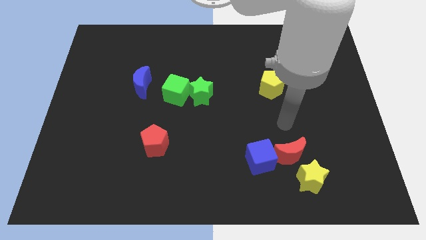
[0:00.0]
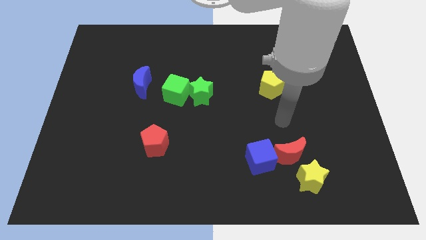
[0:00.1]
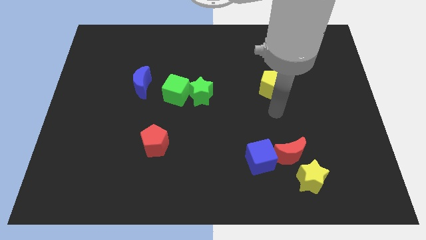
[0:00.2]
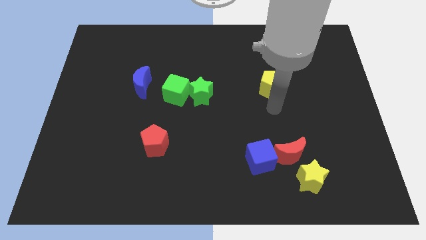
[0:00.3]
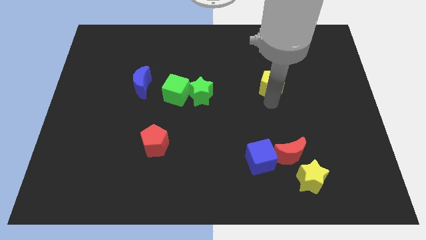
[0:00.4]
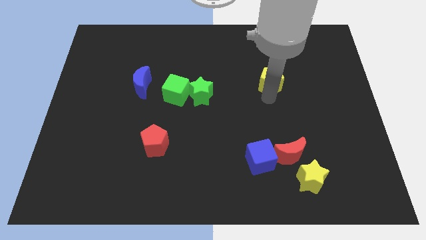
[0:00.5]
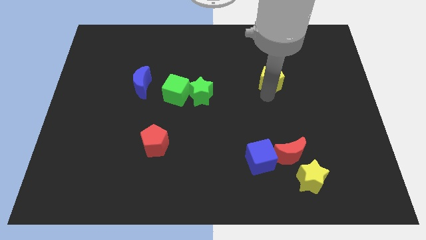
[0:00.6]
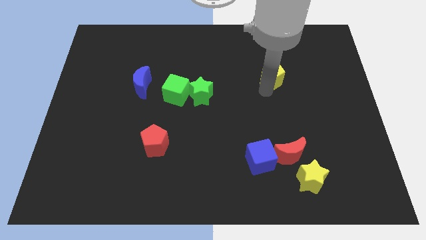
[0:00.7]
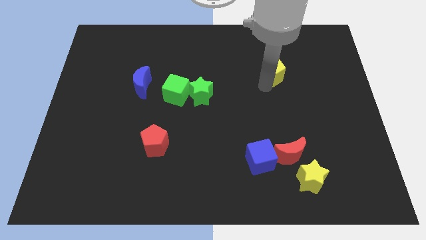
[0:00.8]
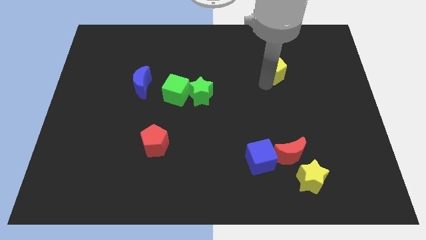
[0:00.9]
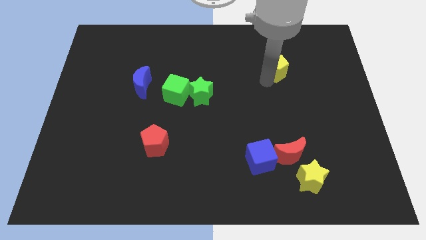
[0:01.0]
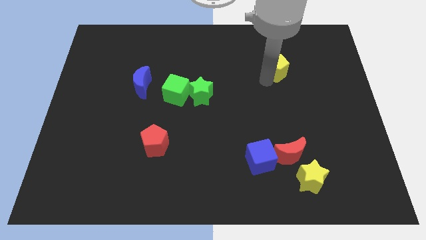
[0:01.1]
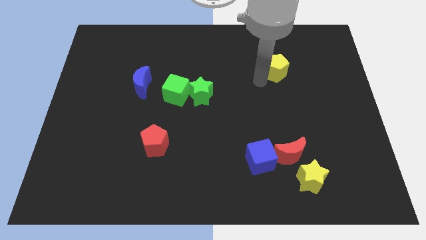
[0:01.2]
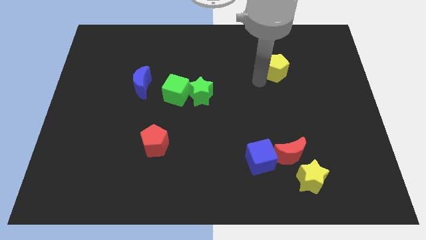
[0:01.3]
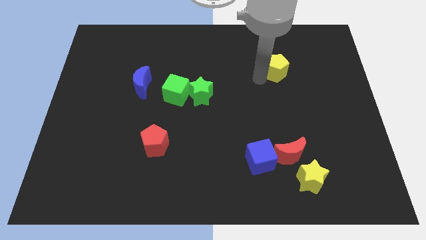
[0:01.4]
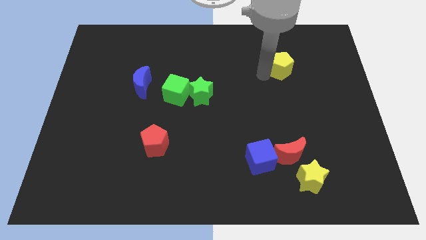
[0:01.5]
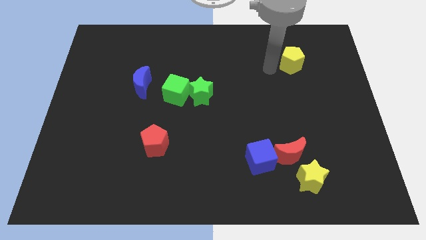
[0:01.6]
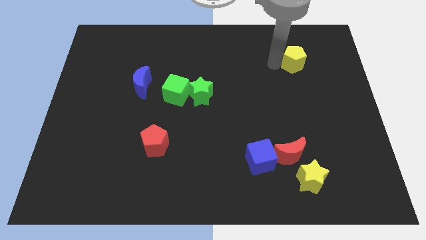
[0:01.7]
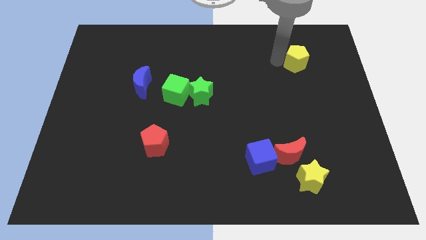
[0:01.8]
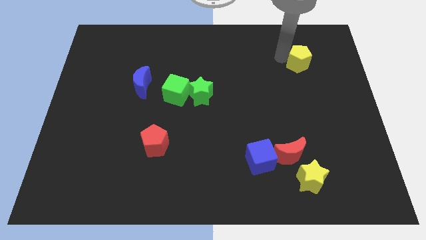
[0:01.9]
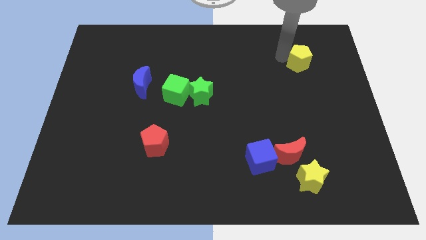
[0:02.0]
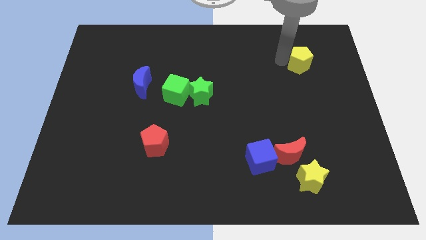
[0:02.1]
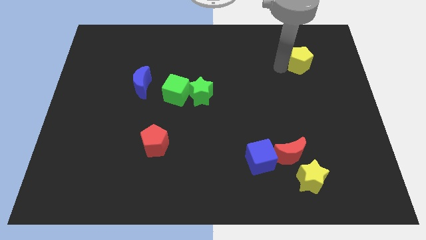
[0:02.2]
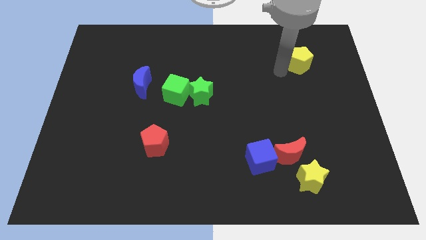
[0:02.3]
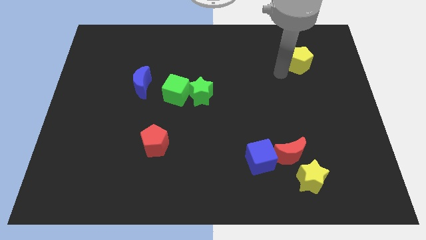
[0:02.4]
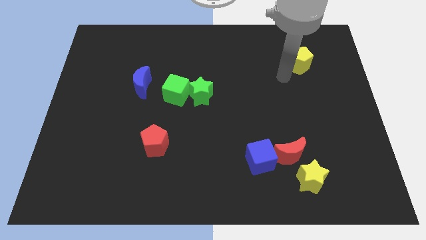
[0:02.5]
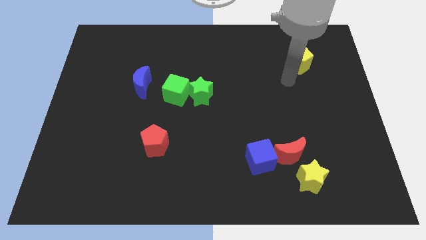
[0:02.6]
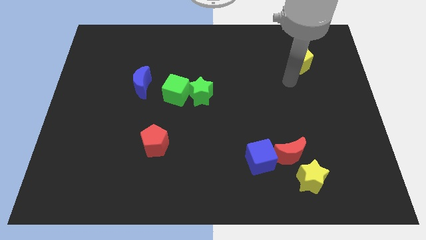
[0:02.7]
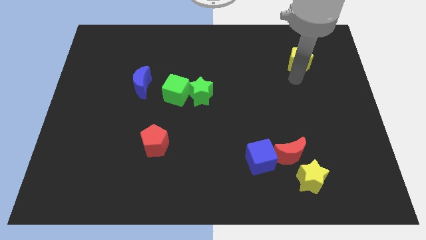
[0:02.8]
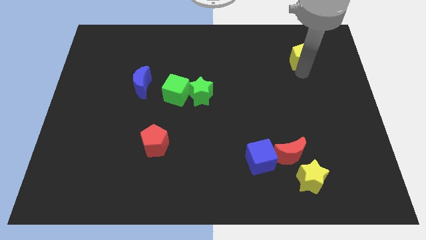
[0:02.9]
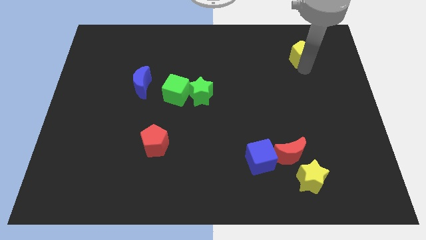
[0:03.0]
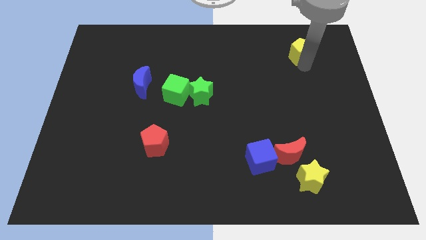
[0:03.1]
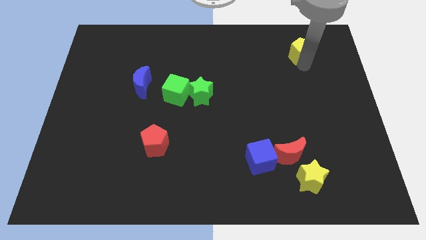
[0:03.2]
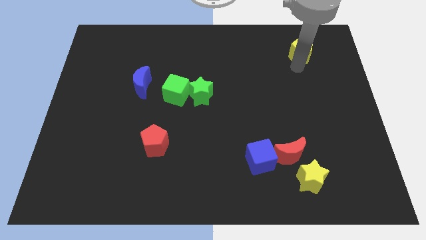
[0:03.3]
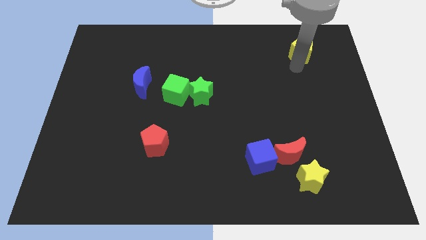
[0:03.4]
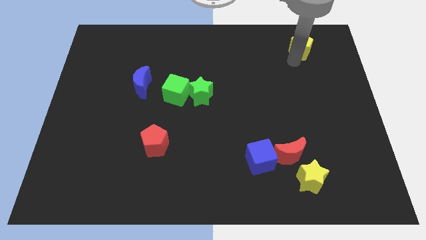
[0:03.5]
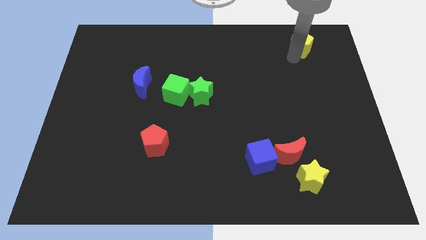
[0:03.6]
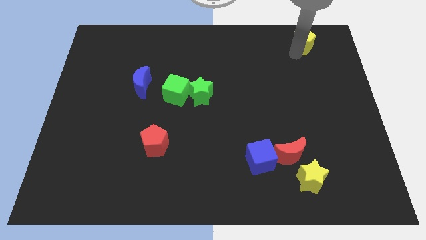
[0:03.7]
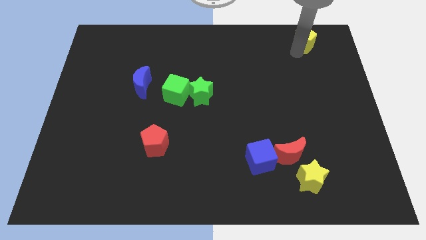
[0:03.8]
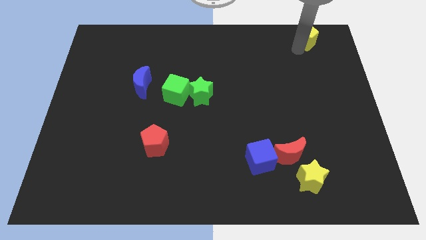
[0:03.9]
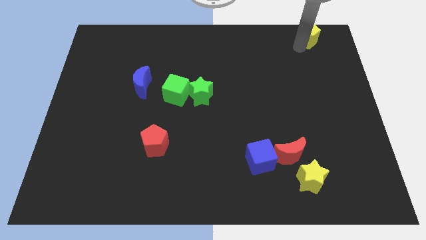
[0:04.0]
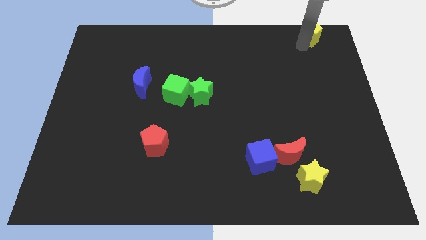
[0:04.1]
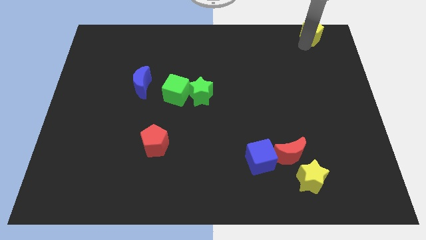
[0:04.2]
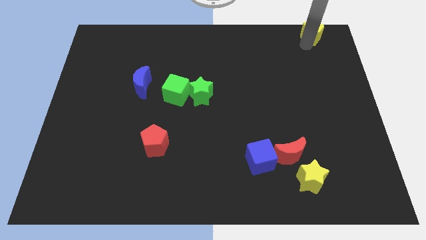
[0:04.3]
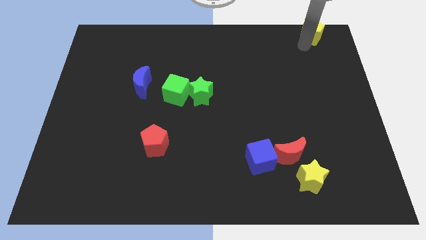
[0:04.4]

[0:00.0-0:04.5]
move the yellow pentagon towards the top right corner

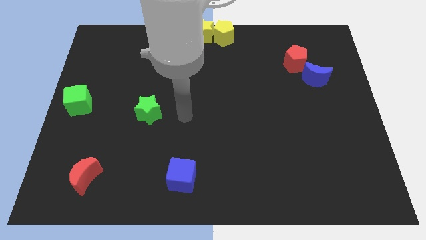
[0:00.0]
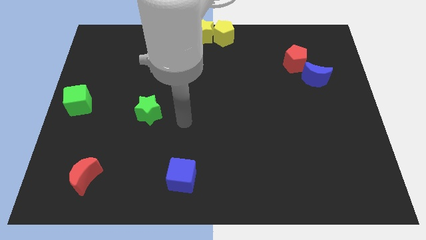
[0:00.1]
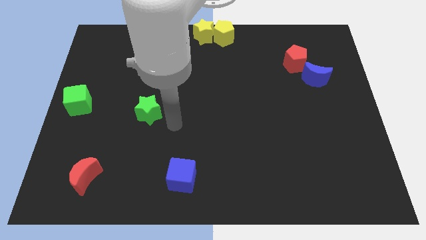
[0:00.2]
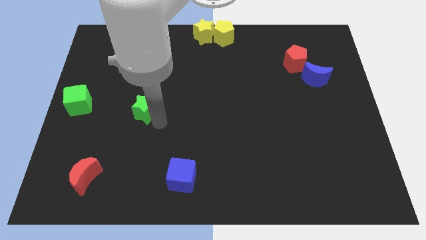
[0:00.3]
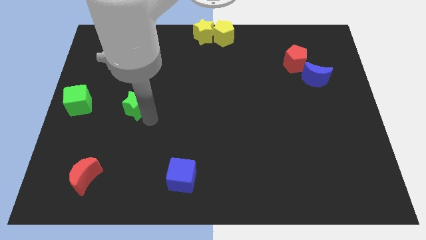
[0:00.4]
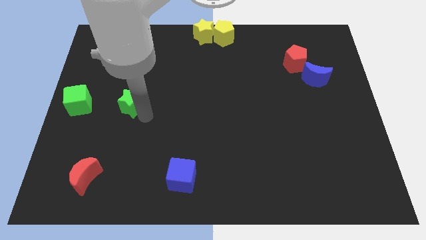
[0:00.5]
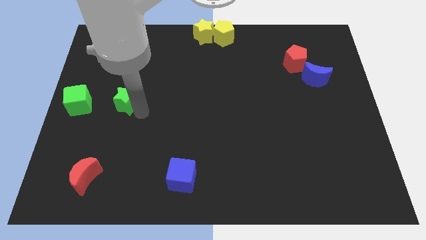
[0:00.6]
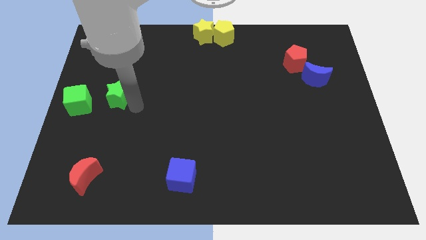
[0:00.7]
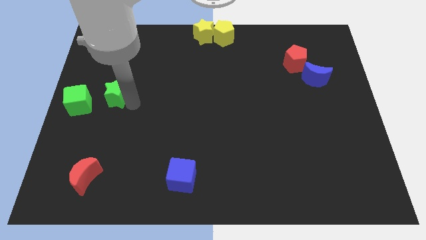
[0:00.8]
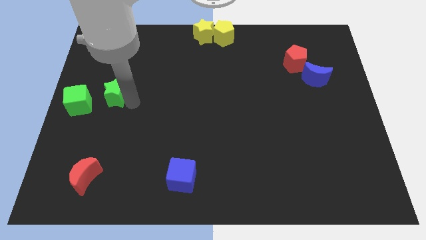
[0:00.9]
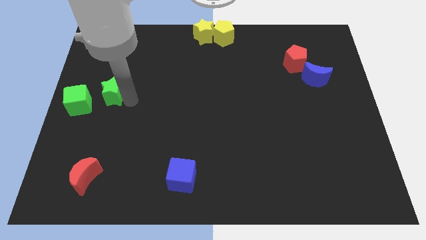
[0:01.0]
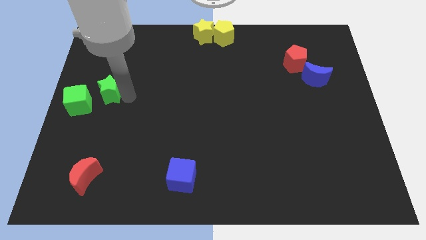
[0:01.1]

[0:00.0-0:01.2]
move the green star to the right of the green cube

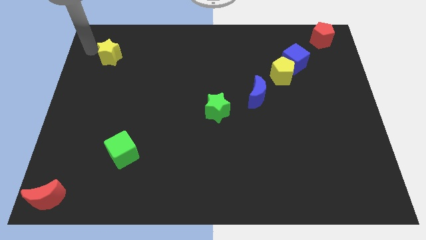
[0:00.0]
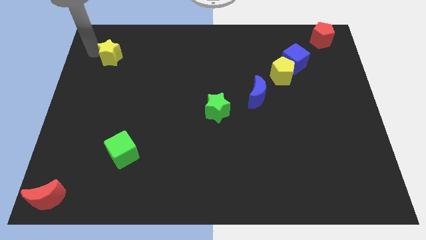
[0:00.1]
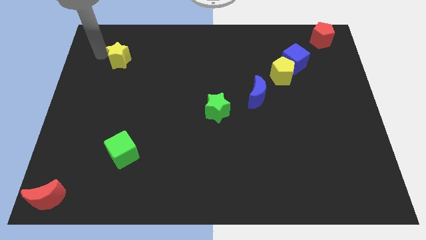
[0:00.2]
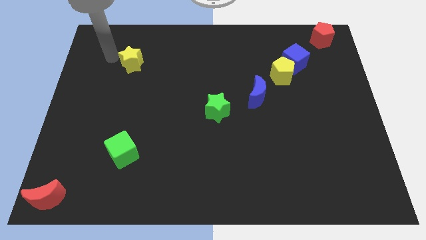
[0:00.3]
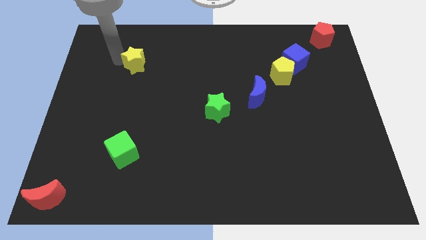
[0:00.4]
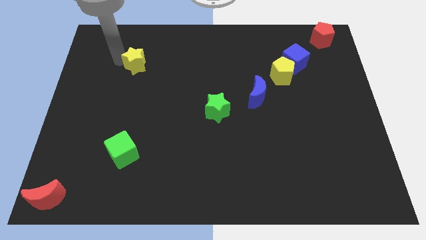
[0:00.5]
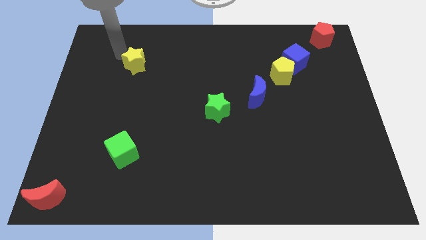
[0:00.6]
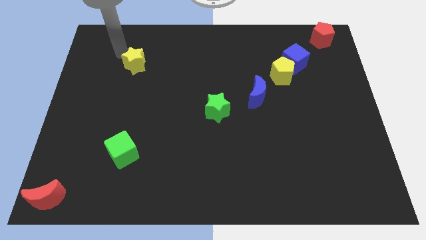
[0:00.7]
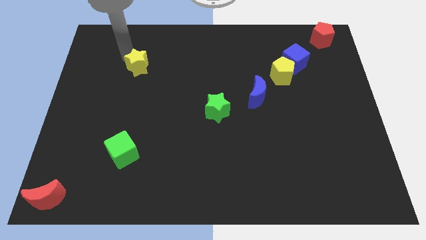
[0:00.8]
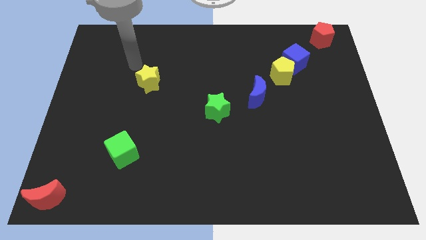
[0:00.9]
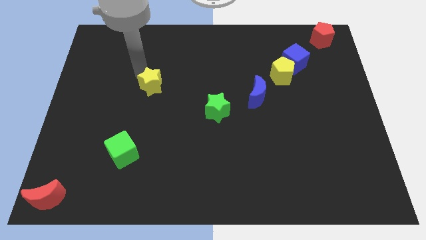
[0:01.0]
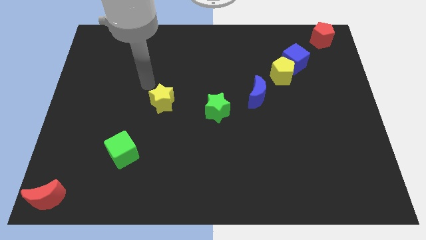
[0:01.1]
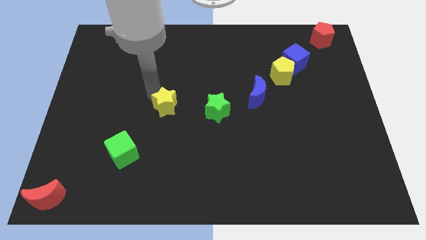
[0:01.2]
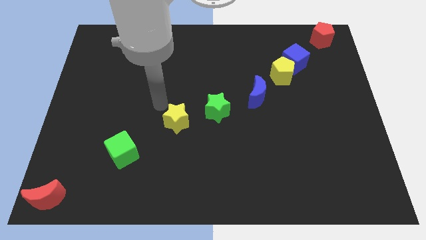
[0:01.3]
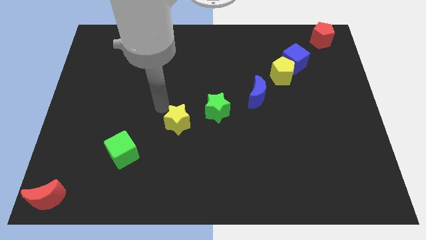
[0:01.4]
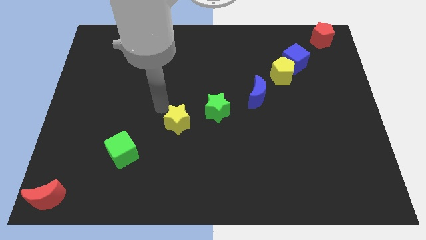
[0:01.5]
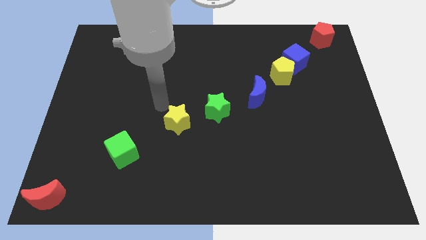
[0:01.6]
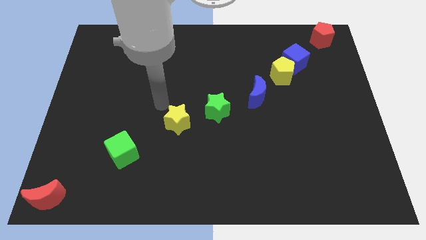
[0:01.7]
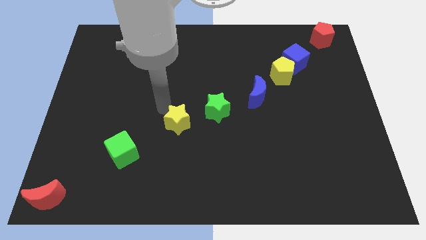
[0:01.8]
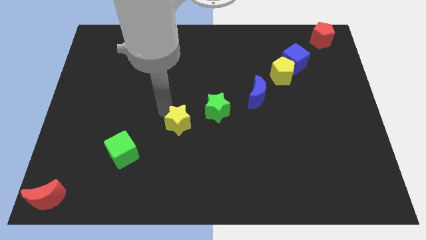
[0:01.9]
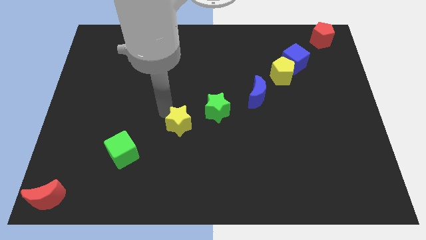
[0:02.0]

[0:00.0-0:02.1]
move the yellow star in between the green cube and the green star

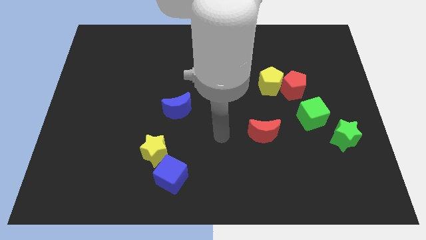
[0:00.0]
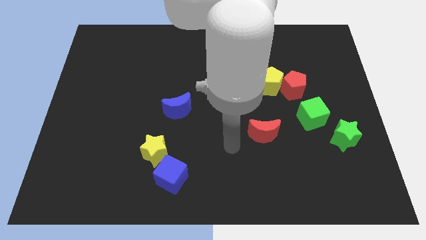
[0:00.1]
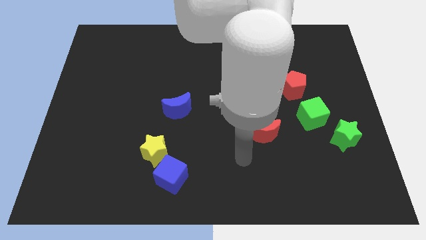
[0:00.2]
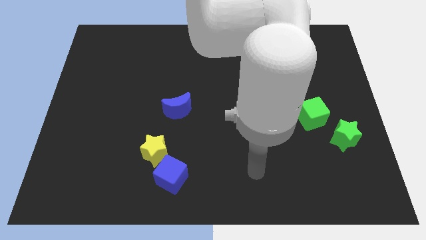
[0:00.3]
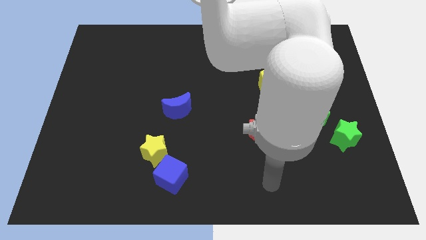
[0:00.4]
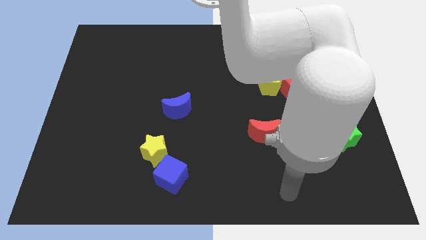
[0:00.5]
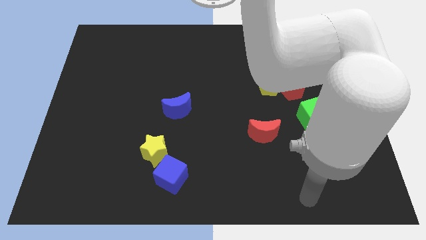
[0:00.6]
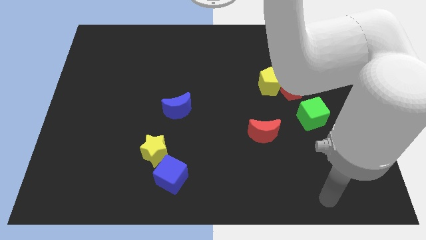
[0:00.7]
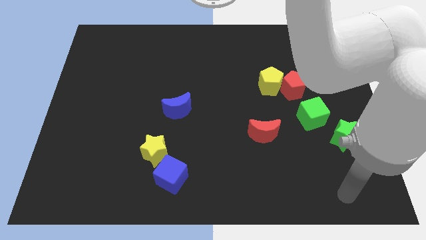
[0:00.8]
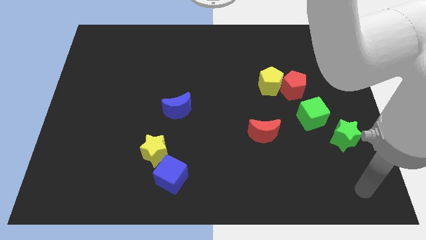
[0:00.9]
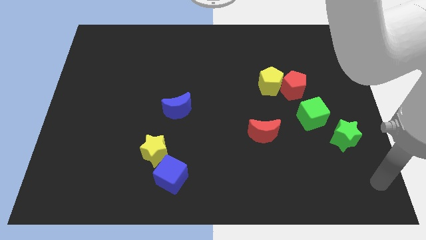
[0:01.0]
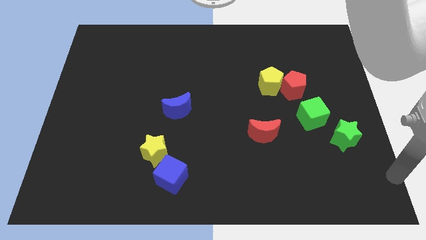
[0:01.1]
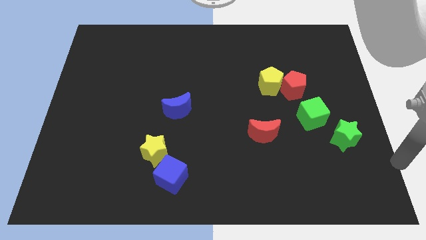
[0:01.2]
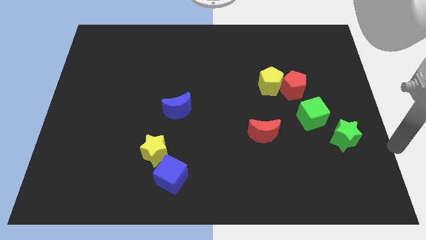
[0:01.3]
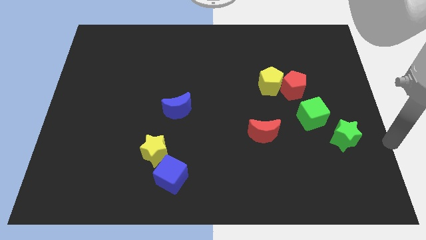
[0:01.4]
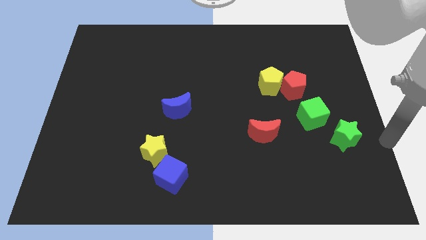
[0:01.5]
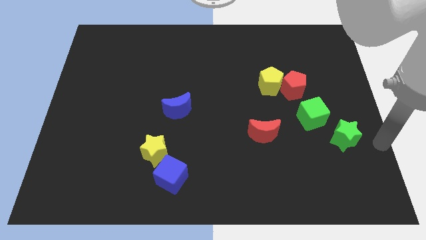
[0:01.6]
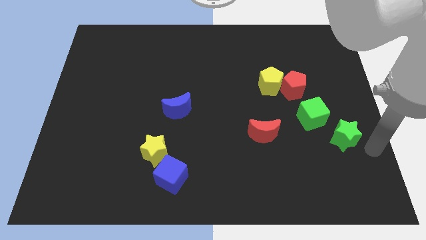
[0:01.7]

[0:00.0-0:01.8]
go to the right side of the green star
